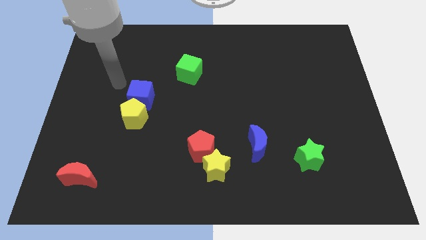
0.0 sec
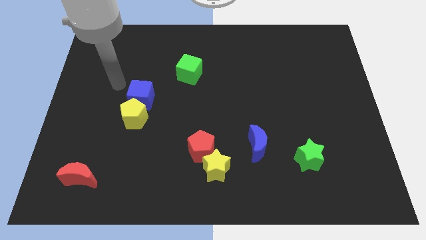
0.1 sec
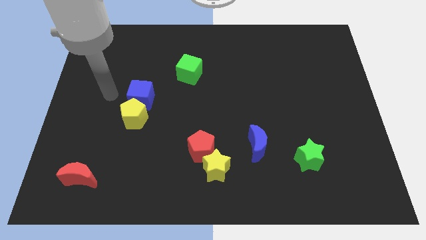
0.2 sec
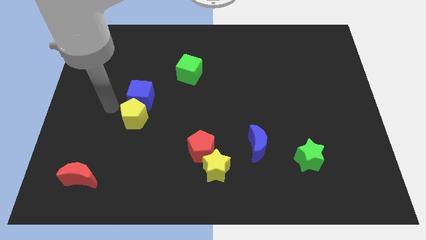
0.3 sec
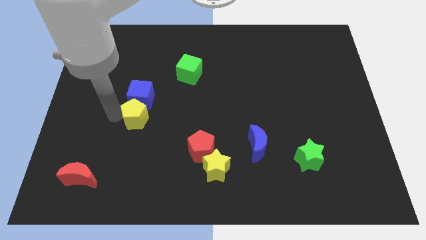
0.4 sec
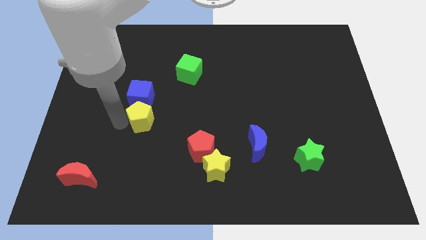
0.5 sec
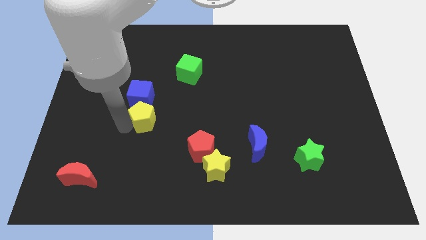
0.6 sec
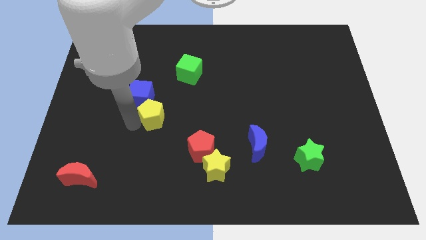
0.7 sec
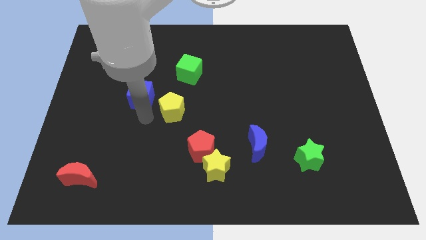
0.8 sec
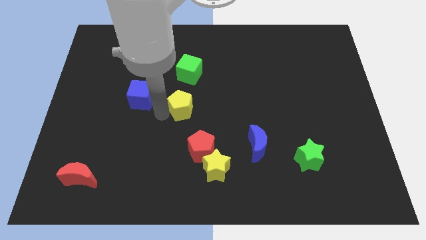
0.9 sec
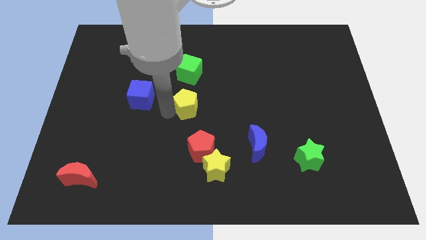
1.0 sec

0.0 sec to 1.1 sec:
slide yellow pentagon to the right of blue cube

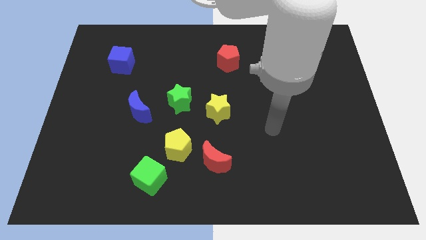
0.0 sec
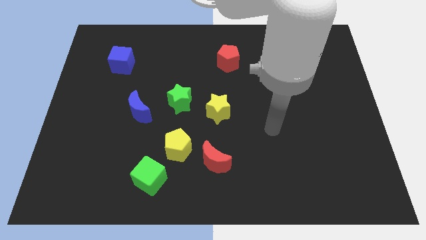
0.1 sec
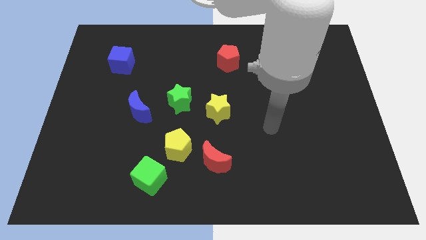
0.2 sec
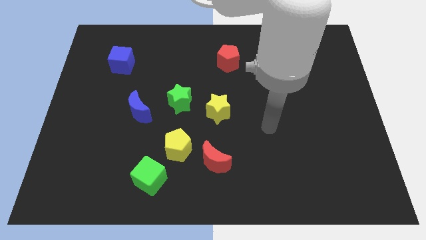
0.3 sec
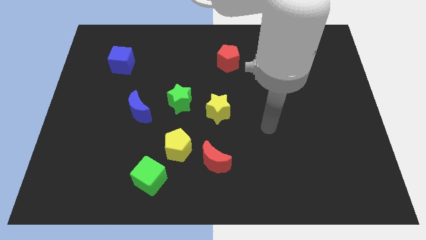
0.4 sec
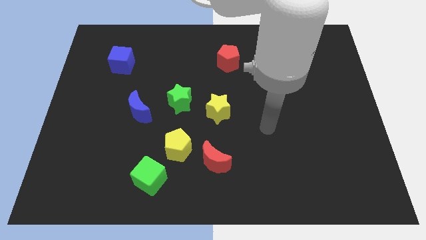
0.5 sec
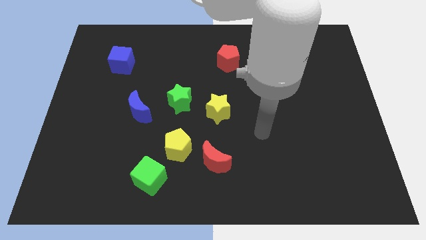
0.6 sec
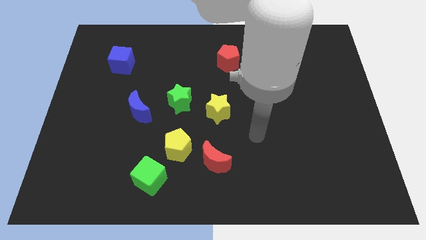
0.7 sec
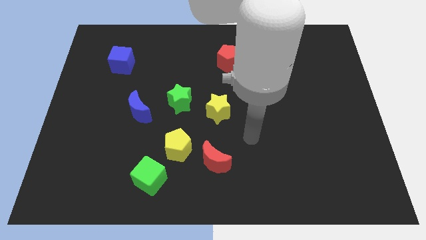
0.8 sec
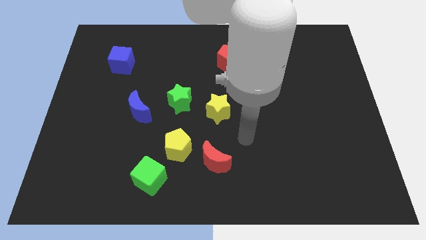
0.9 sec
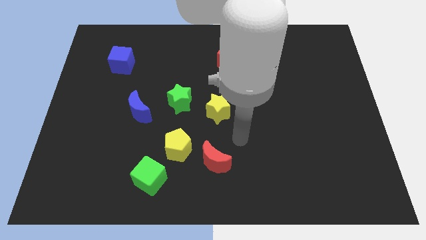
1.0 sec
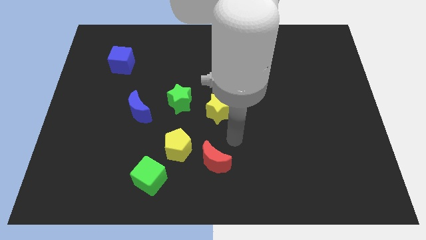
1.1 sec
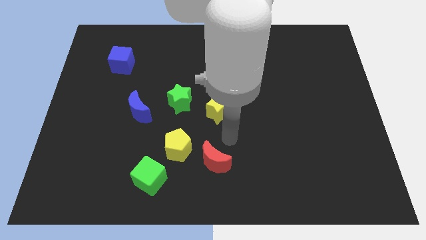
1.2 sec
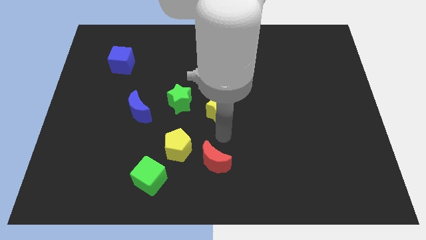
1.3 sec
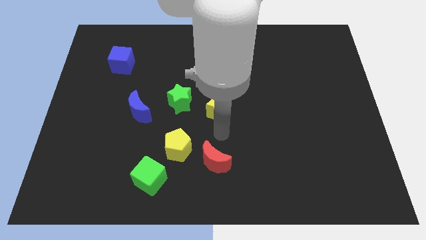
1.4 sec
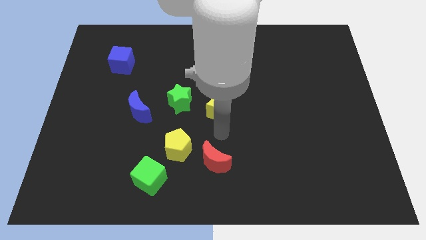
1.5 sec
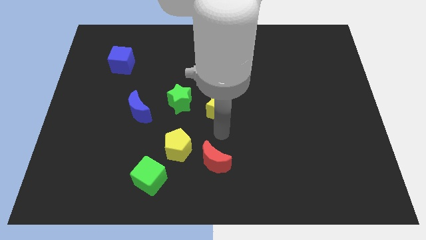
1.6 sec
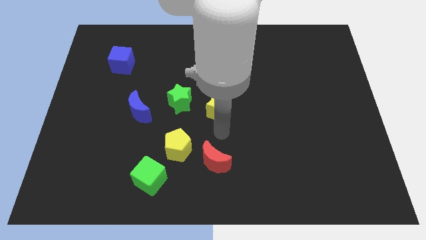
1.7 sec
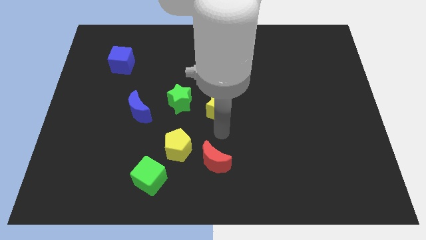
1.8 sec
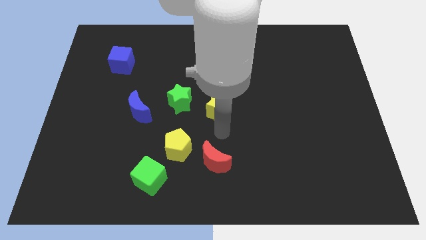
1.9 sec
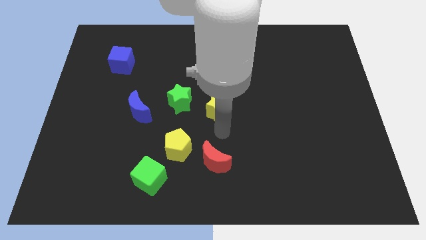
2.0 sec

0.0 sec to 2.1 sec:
move your robot arm close to the yellow star

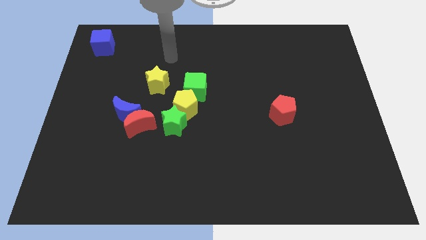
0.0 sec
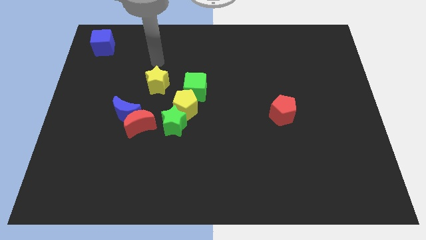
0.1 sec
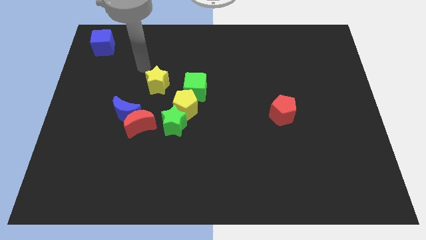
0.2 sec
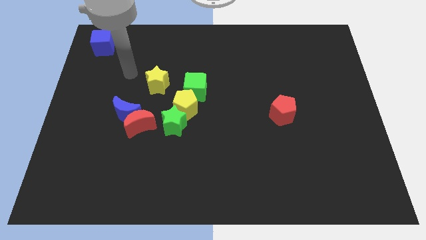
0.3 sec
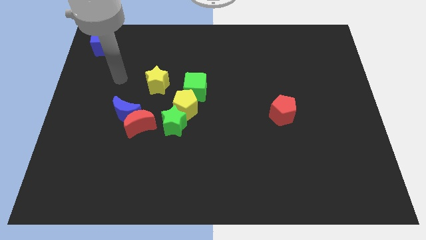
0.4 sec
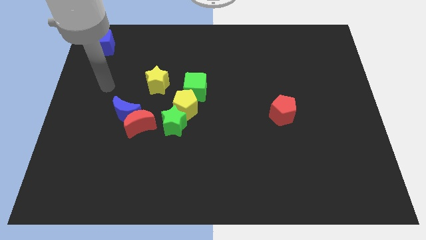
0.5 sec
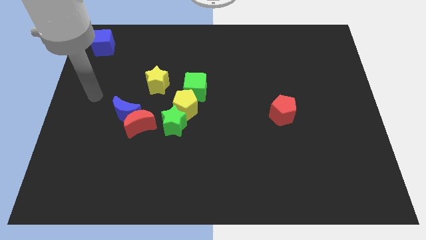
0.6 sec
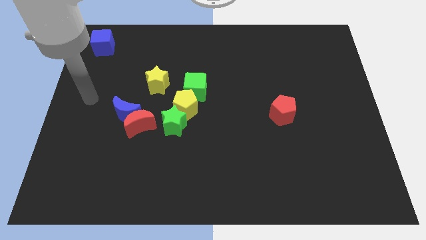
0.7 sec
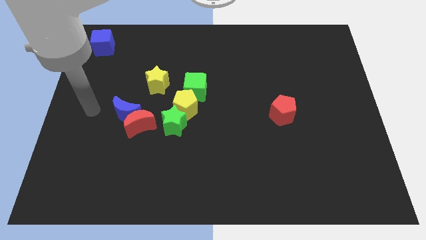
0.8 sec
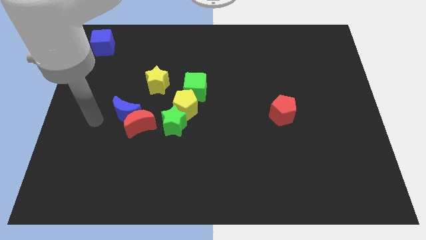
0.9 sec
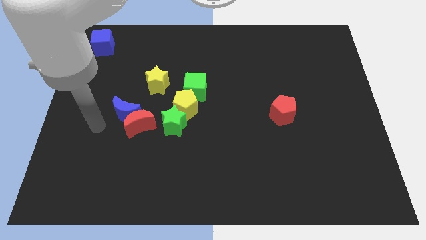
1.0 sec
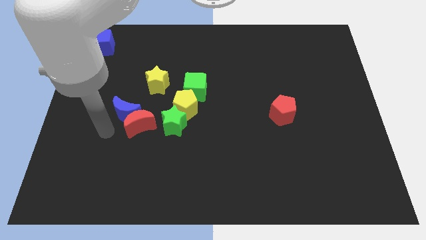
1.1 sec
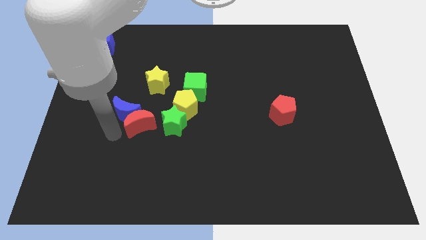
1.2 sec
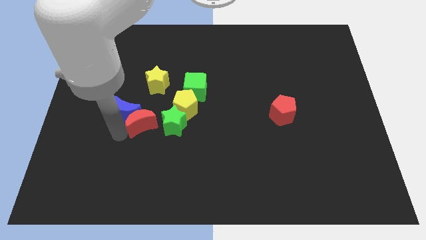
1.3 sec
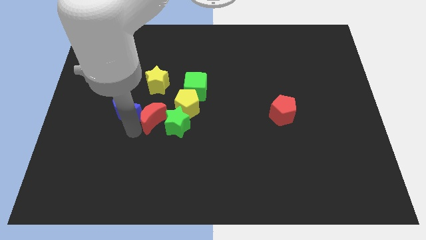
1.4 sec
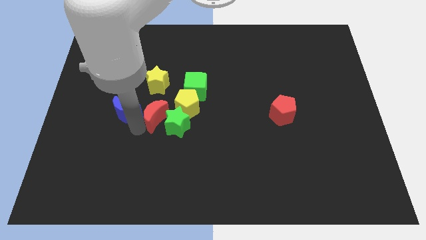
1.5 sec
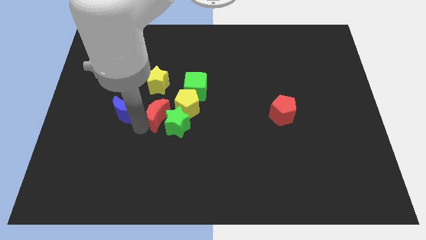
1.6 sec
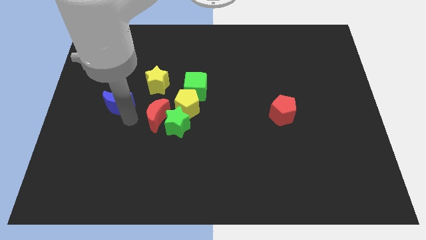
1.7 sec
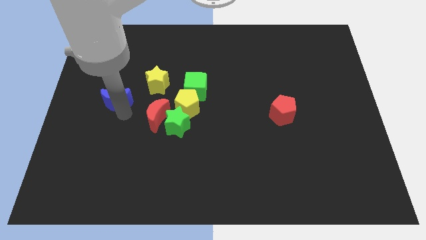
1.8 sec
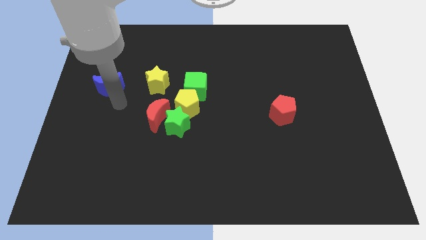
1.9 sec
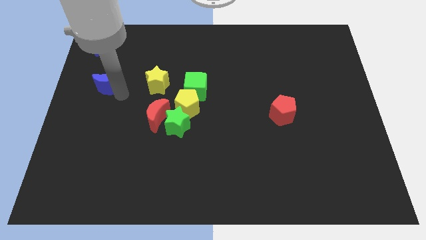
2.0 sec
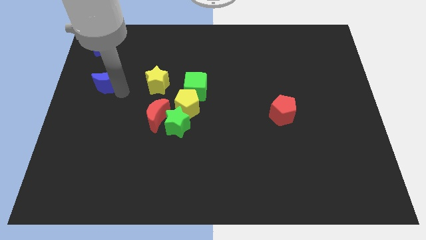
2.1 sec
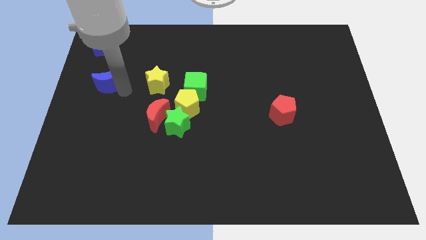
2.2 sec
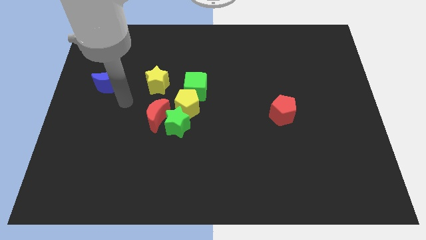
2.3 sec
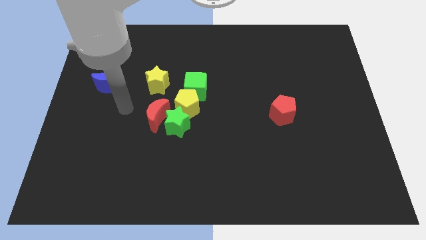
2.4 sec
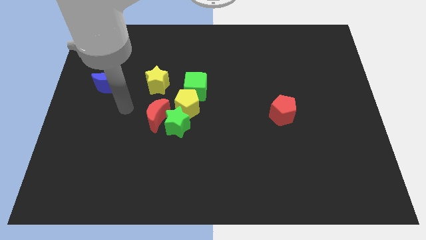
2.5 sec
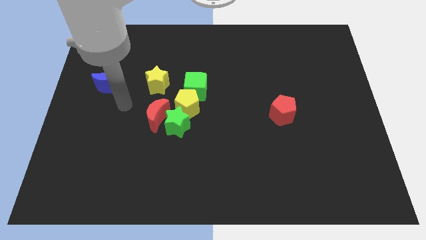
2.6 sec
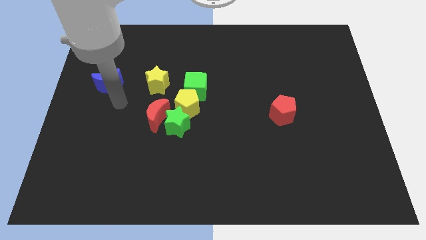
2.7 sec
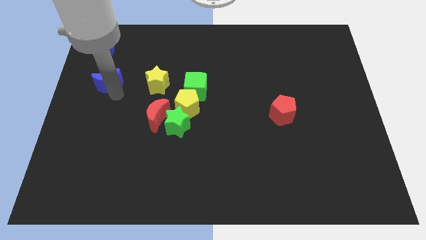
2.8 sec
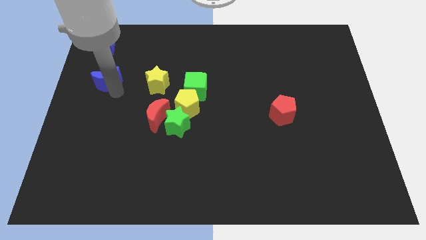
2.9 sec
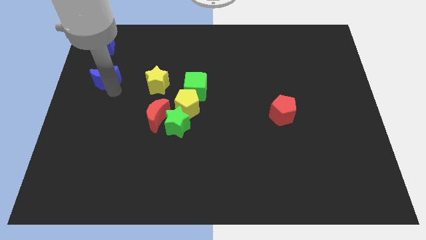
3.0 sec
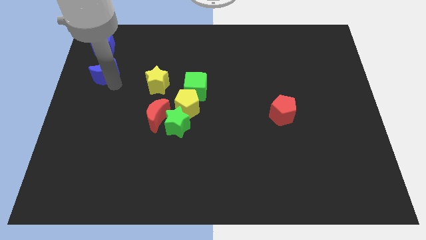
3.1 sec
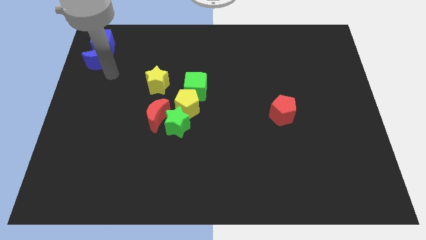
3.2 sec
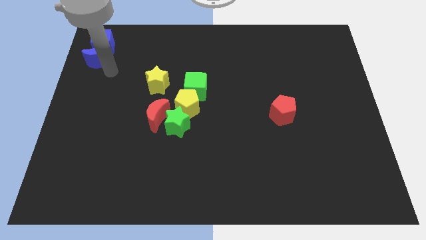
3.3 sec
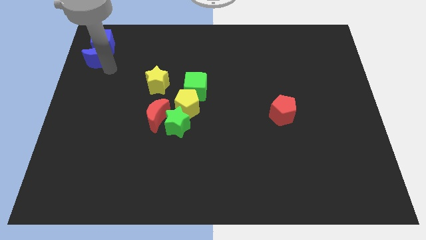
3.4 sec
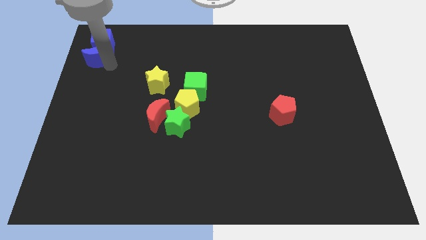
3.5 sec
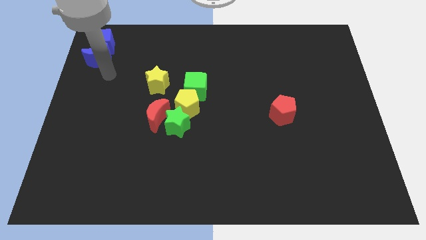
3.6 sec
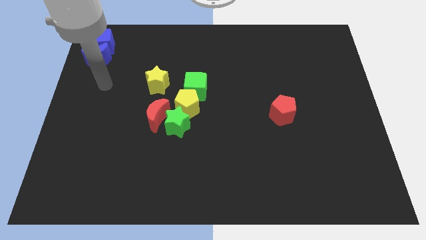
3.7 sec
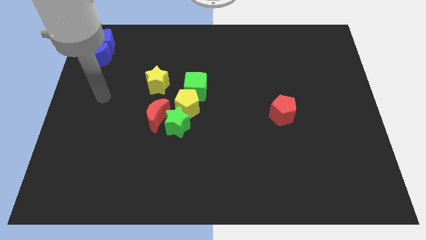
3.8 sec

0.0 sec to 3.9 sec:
move the blue crescent into the blue cube from the bottom

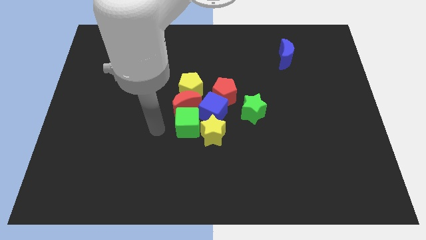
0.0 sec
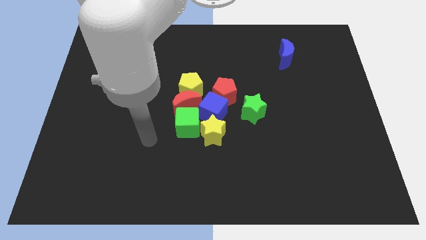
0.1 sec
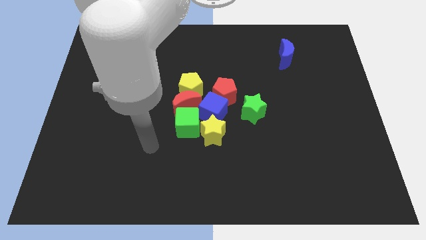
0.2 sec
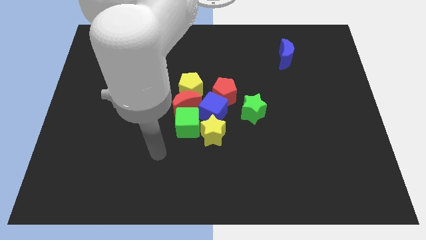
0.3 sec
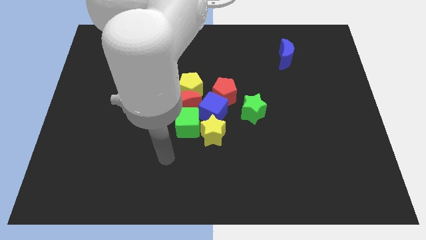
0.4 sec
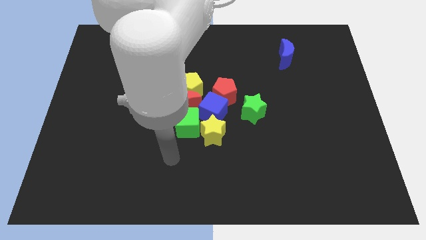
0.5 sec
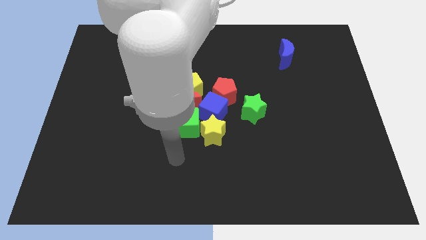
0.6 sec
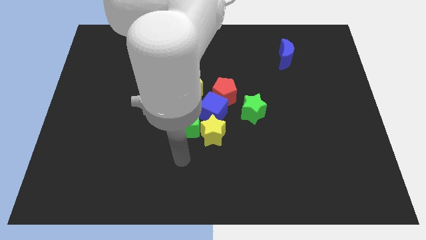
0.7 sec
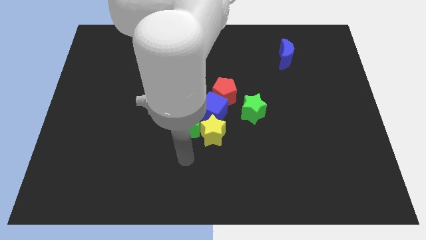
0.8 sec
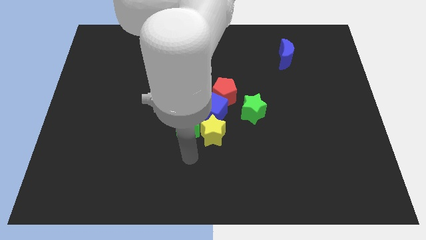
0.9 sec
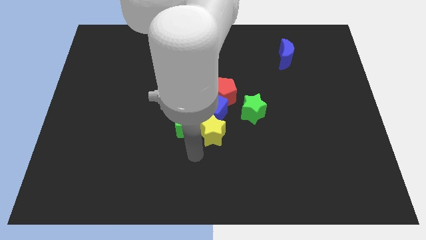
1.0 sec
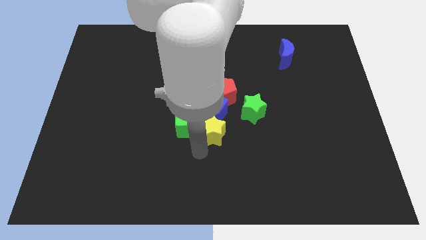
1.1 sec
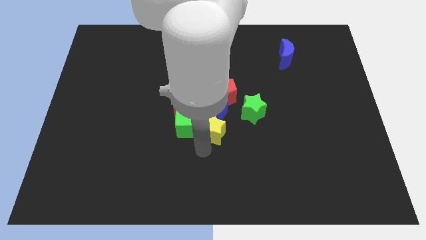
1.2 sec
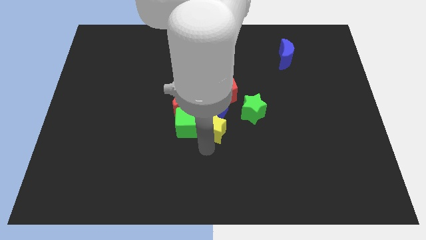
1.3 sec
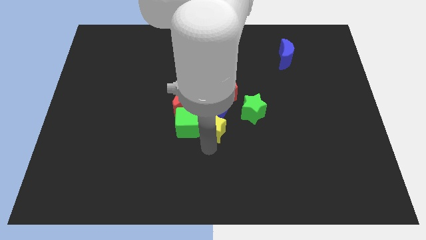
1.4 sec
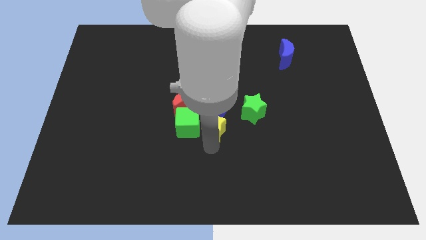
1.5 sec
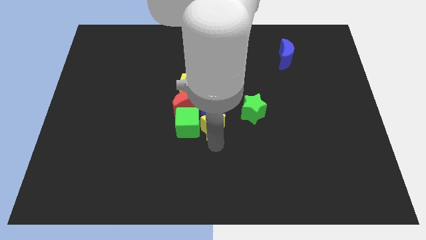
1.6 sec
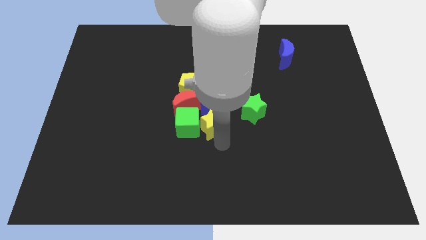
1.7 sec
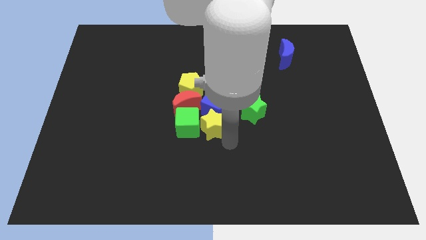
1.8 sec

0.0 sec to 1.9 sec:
slightly push the yellow star towards the blue cube
